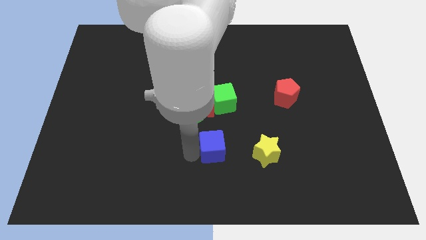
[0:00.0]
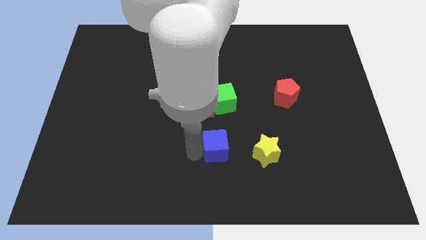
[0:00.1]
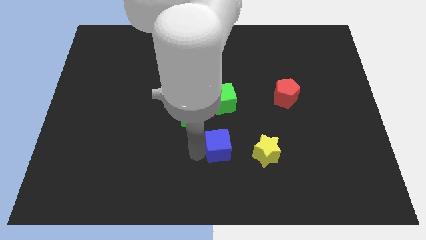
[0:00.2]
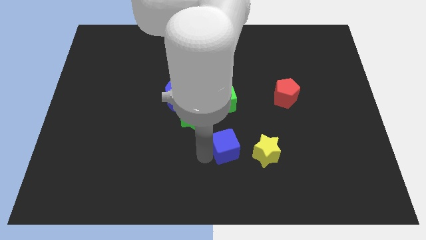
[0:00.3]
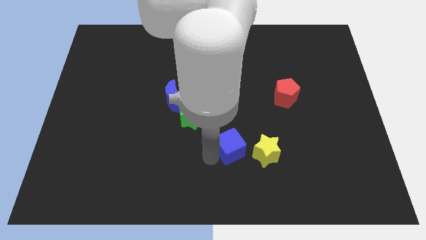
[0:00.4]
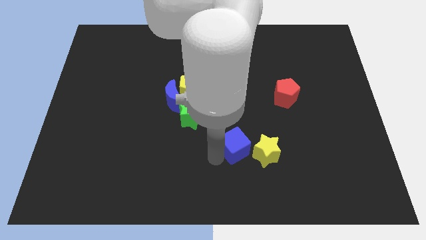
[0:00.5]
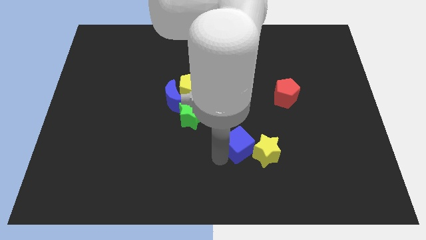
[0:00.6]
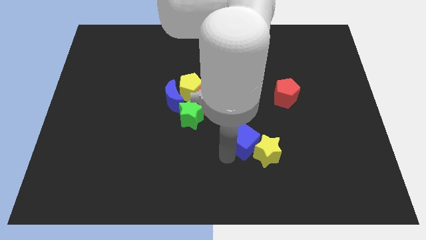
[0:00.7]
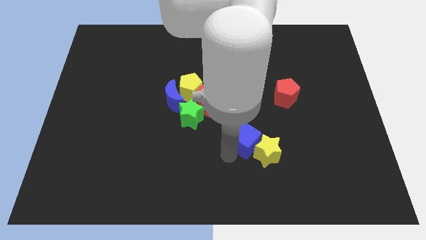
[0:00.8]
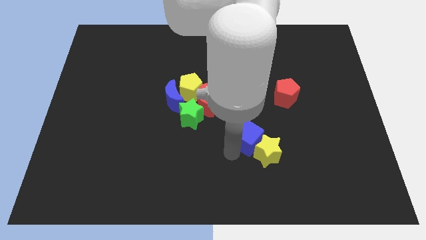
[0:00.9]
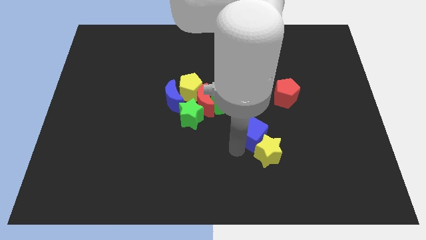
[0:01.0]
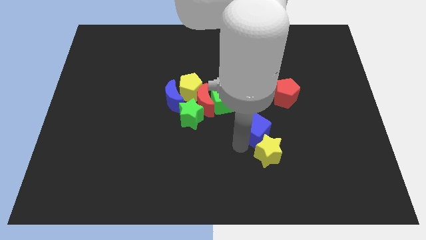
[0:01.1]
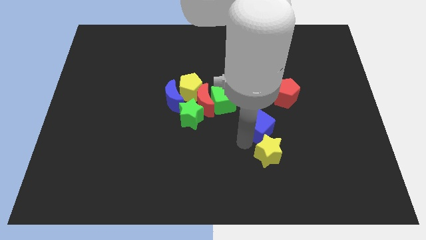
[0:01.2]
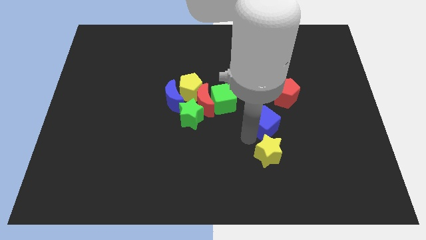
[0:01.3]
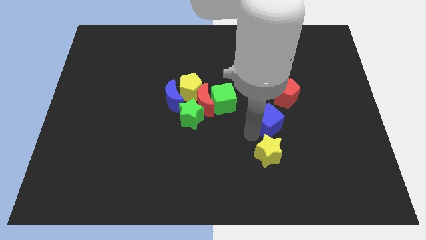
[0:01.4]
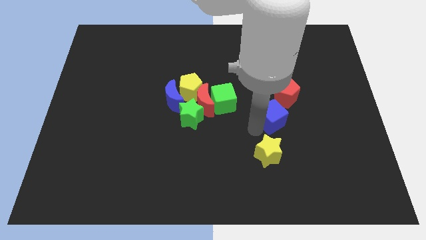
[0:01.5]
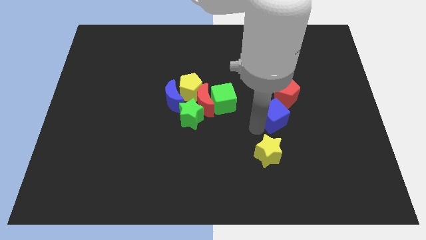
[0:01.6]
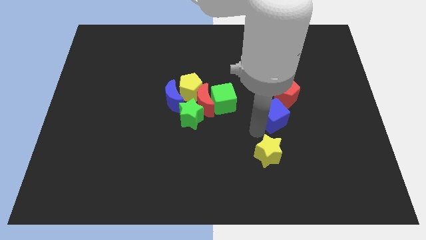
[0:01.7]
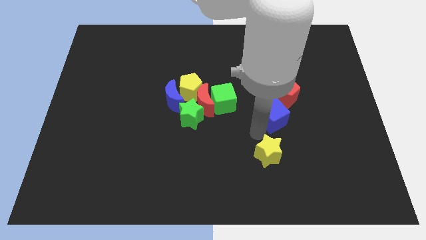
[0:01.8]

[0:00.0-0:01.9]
push blue cube to the bottom of the red pentagon

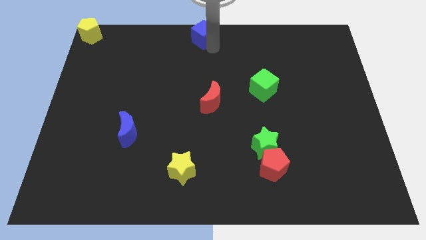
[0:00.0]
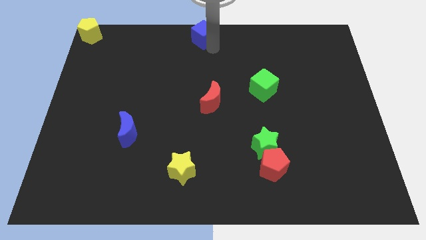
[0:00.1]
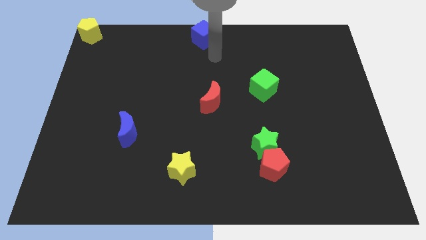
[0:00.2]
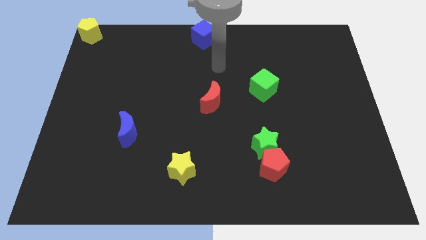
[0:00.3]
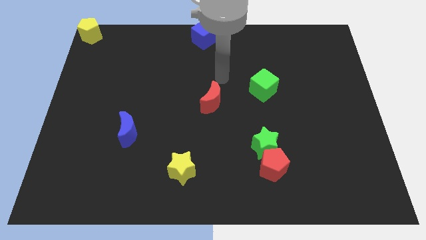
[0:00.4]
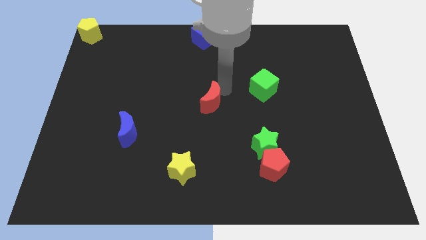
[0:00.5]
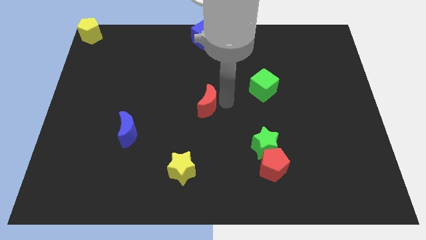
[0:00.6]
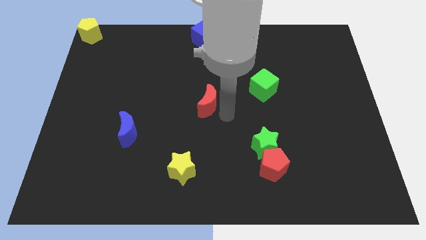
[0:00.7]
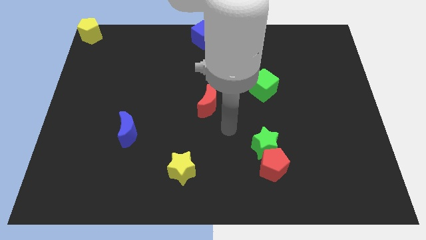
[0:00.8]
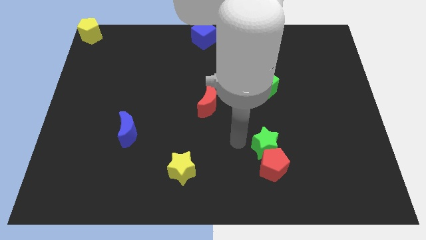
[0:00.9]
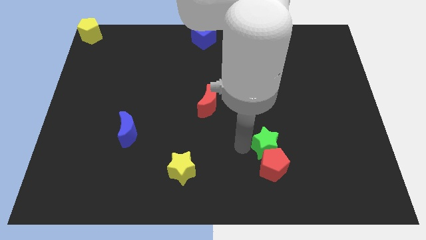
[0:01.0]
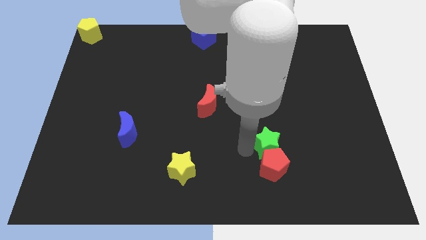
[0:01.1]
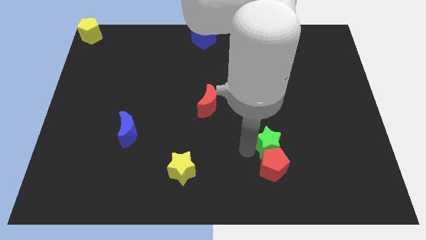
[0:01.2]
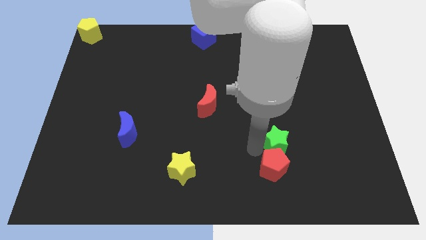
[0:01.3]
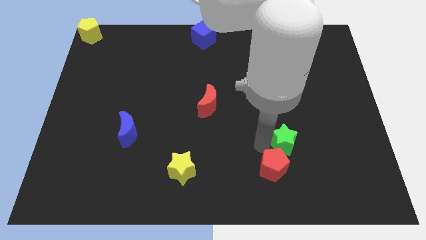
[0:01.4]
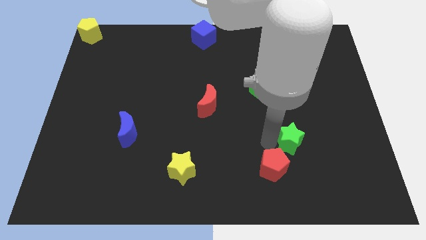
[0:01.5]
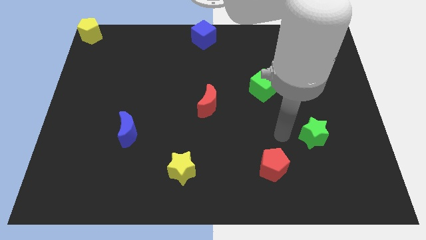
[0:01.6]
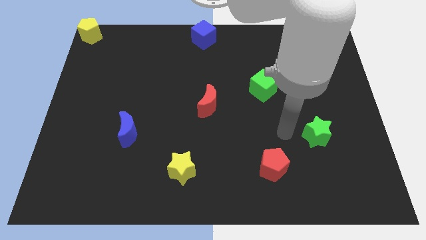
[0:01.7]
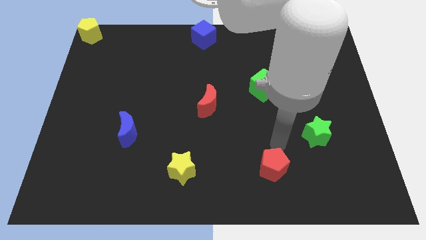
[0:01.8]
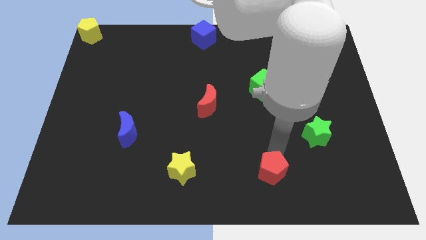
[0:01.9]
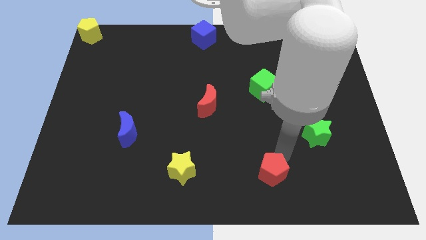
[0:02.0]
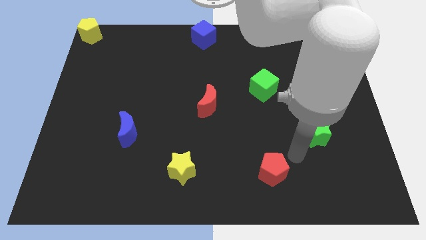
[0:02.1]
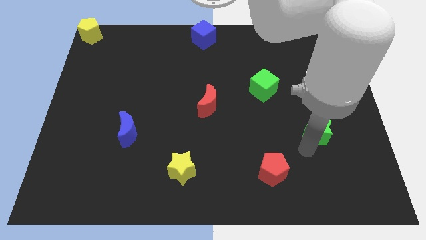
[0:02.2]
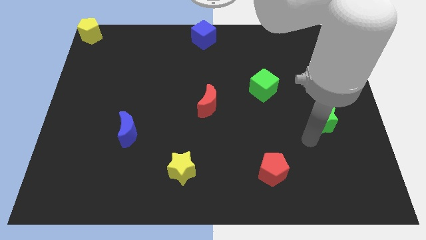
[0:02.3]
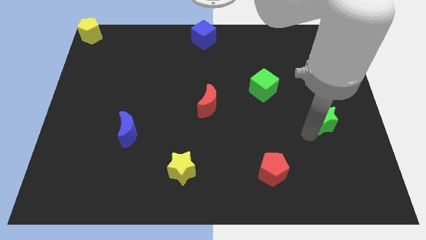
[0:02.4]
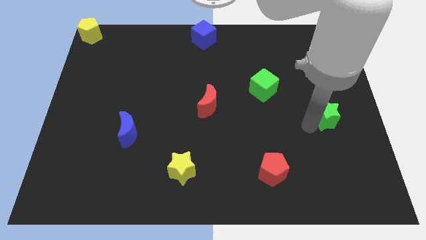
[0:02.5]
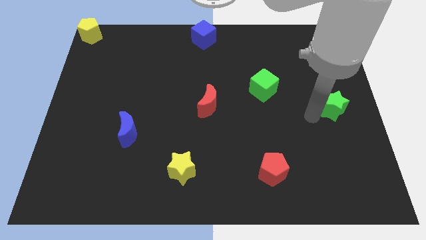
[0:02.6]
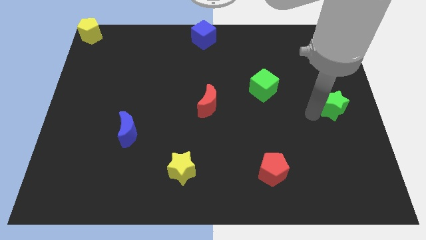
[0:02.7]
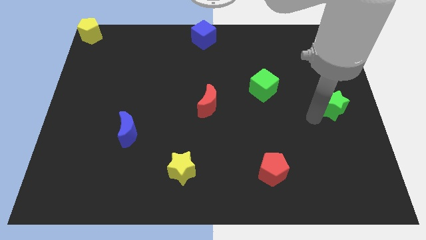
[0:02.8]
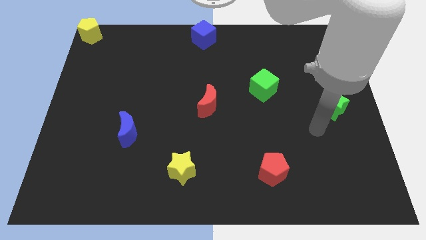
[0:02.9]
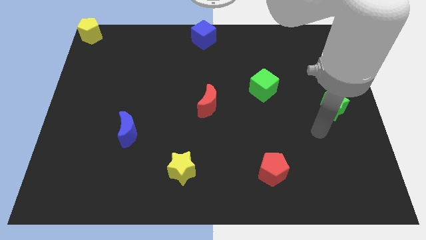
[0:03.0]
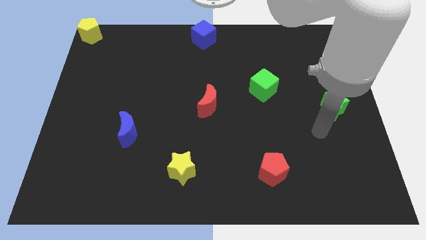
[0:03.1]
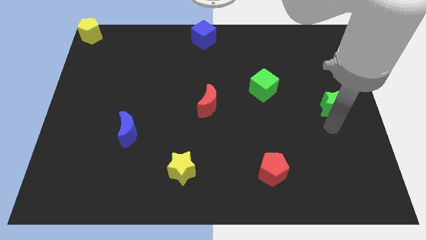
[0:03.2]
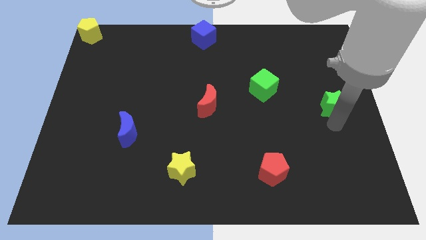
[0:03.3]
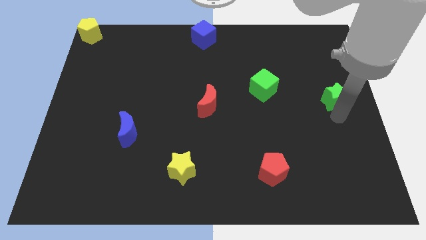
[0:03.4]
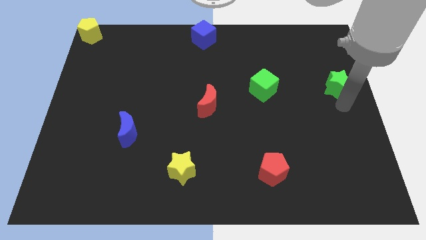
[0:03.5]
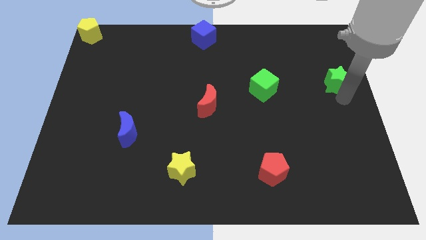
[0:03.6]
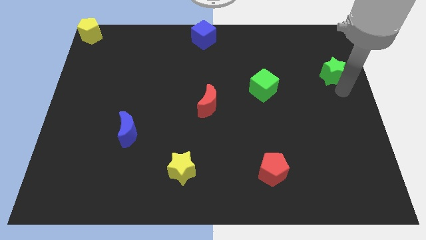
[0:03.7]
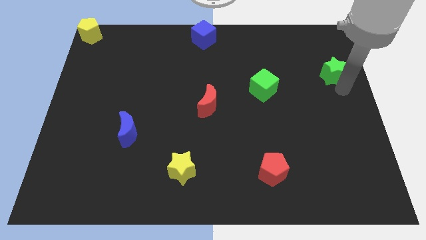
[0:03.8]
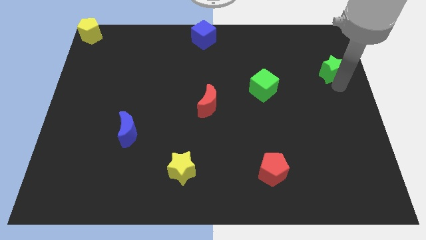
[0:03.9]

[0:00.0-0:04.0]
push the green star beside green cube

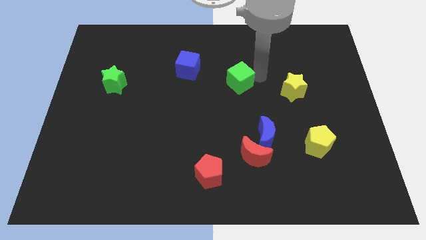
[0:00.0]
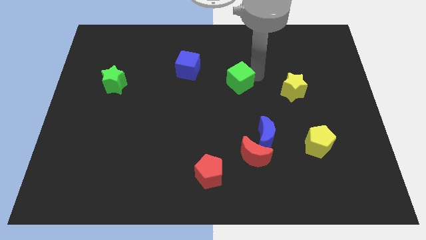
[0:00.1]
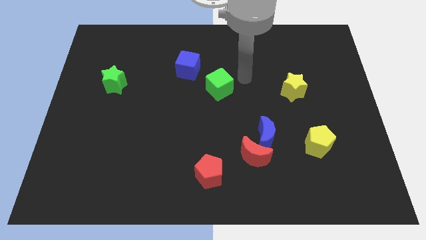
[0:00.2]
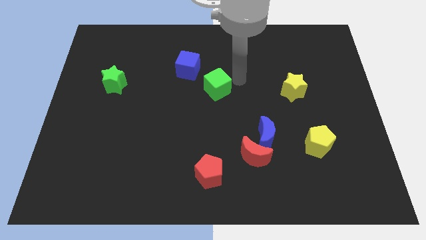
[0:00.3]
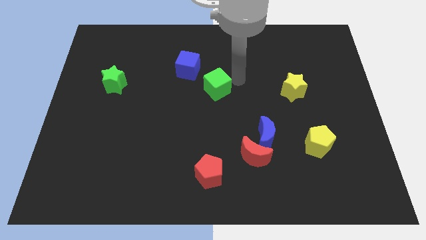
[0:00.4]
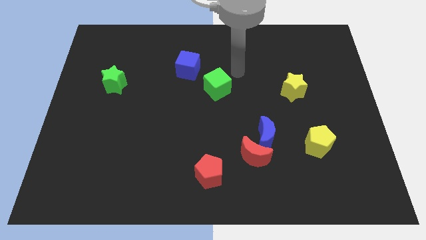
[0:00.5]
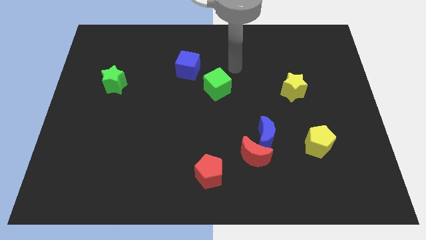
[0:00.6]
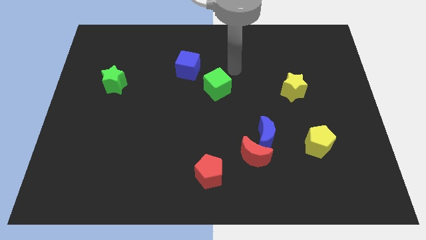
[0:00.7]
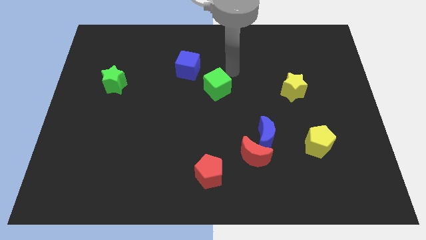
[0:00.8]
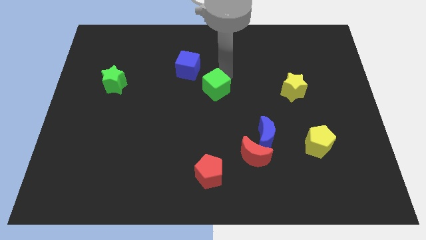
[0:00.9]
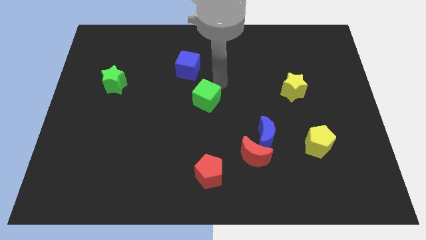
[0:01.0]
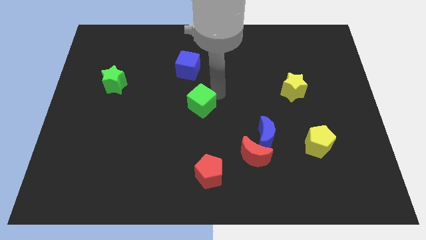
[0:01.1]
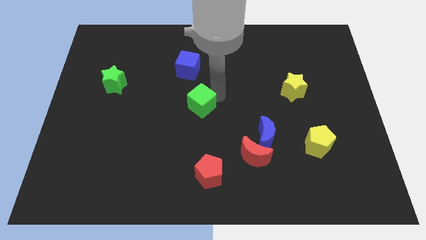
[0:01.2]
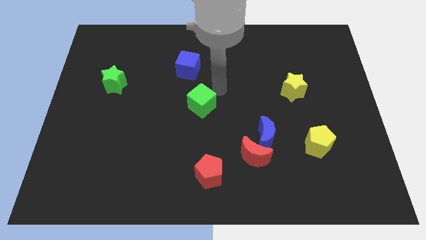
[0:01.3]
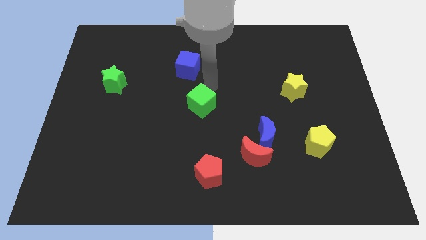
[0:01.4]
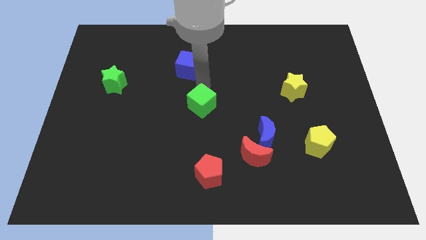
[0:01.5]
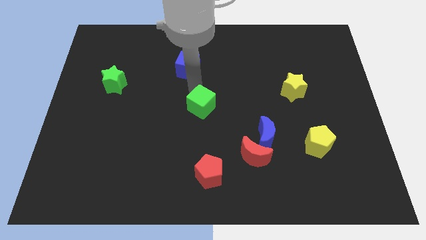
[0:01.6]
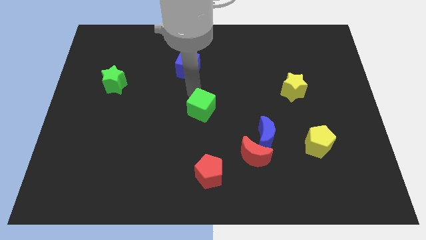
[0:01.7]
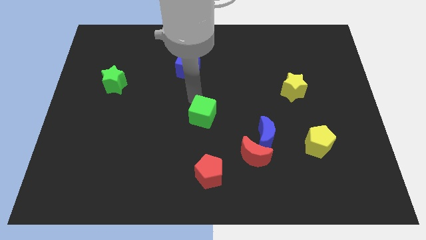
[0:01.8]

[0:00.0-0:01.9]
place the green cube in between the blue cube and red pentagon

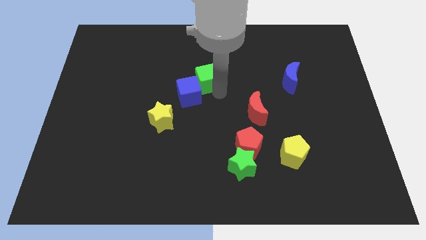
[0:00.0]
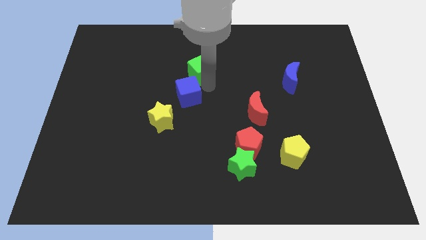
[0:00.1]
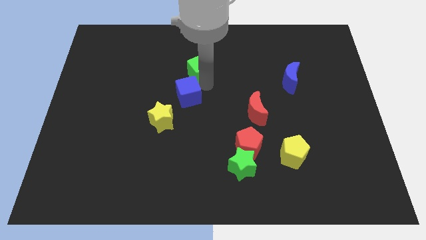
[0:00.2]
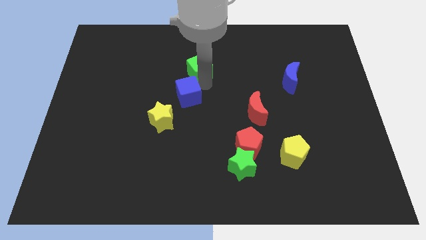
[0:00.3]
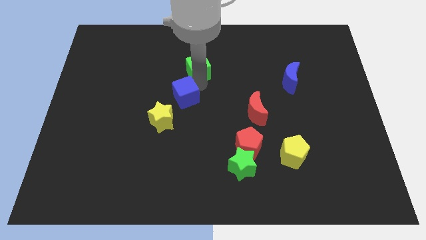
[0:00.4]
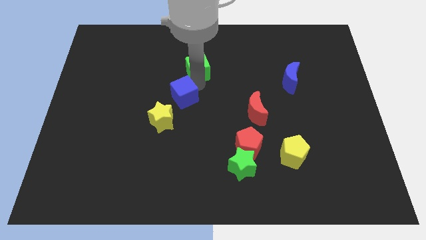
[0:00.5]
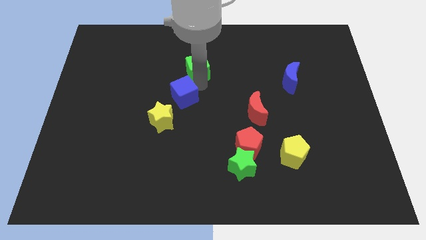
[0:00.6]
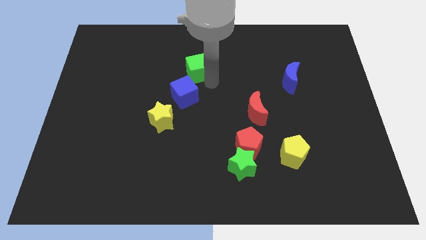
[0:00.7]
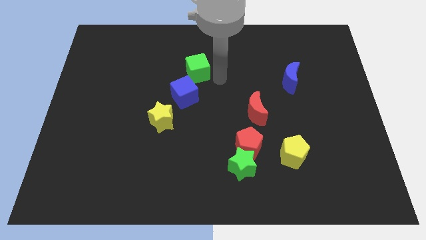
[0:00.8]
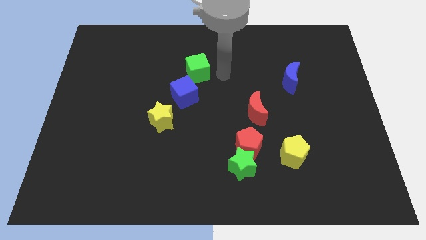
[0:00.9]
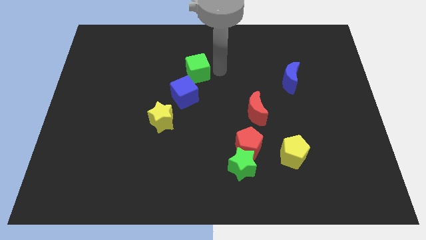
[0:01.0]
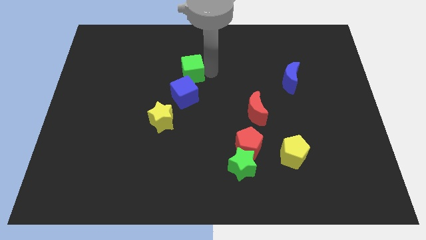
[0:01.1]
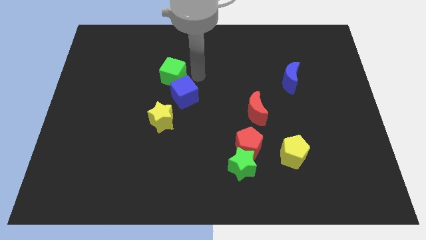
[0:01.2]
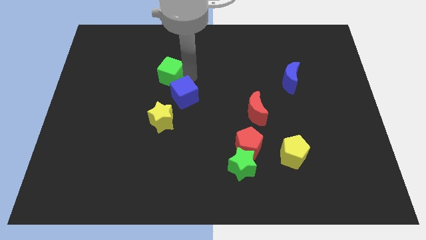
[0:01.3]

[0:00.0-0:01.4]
separate the green cube and blue cube
